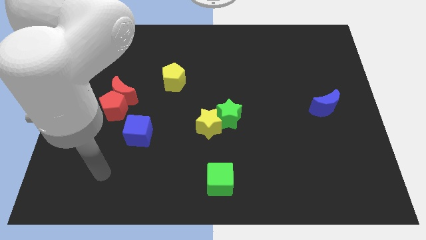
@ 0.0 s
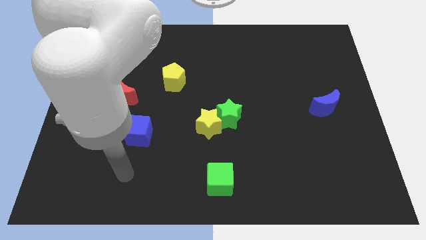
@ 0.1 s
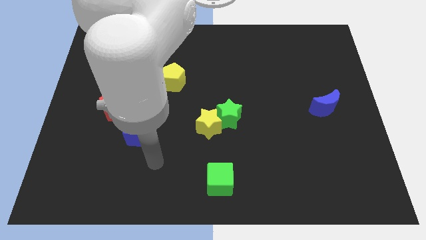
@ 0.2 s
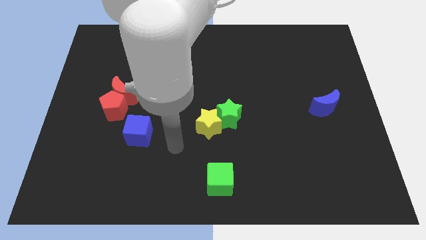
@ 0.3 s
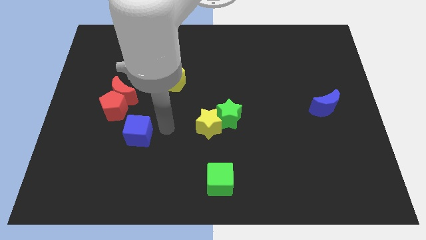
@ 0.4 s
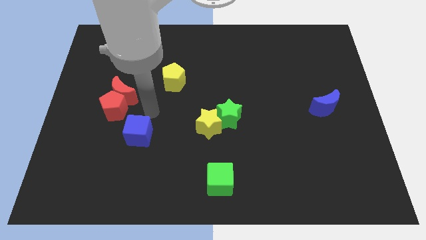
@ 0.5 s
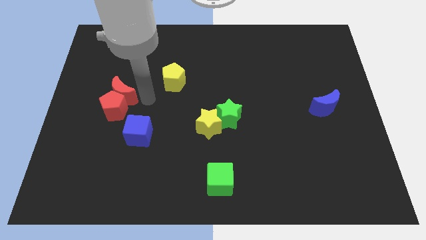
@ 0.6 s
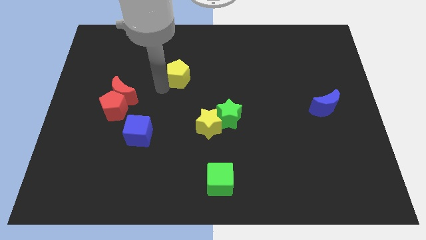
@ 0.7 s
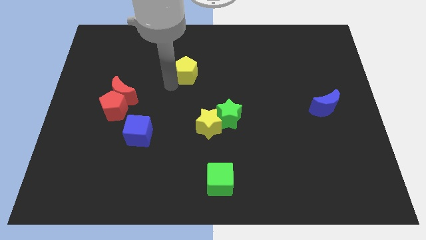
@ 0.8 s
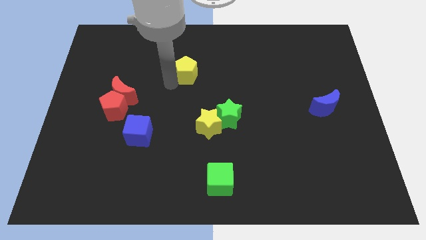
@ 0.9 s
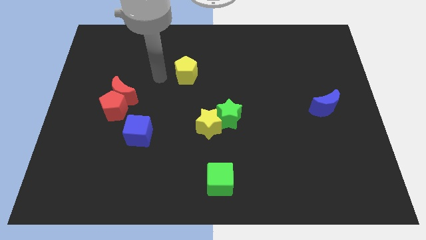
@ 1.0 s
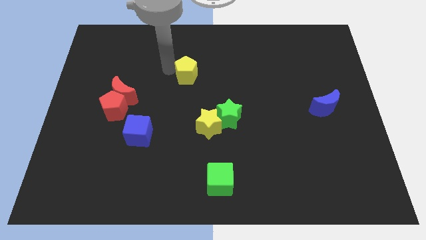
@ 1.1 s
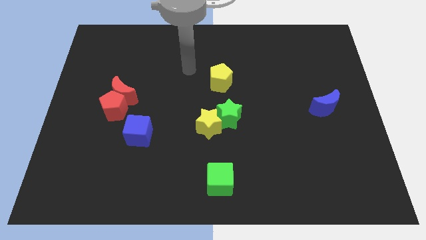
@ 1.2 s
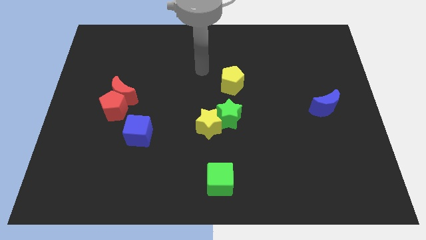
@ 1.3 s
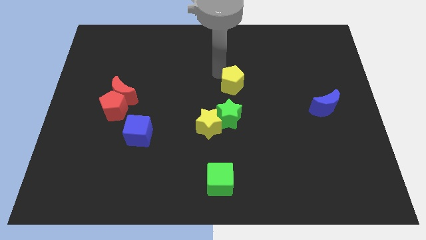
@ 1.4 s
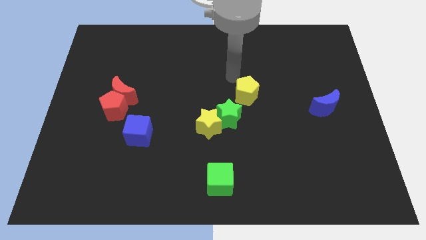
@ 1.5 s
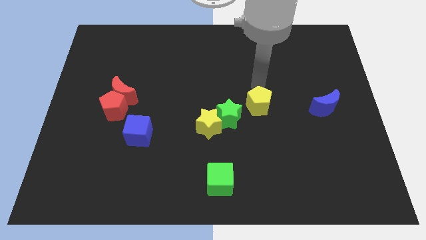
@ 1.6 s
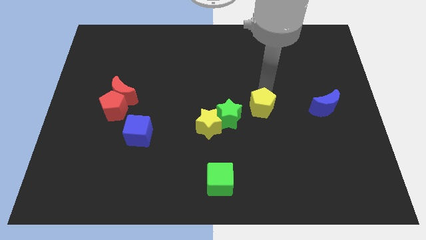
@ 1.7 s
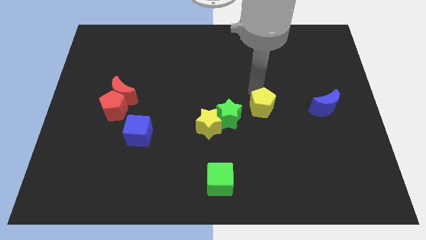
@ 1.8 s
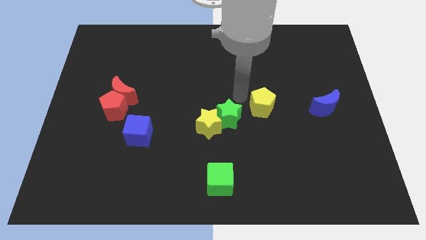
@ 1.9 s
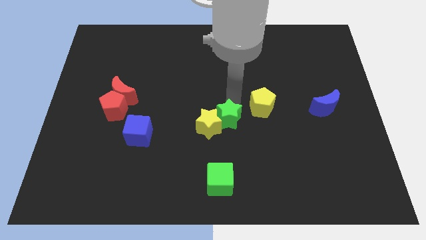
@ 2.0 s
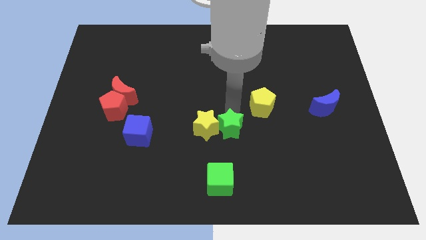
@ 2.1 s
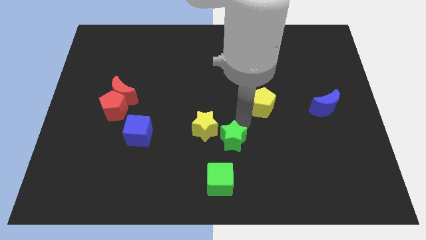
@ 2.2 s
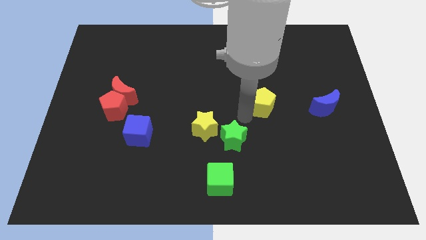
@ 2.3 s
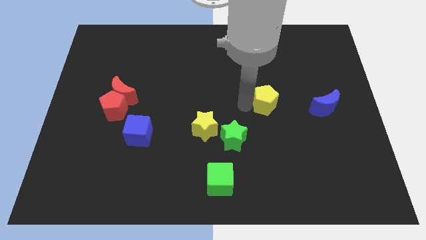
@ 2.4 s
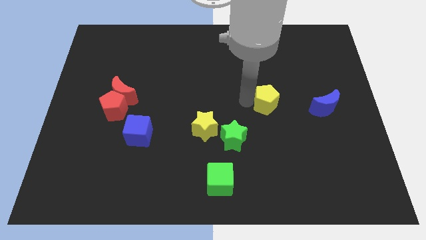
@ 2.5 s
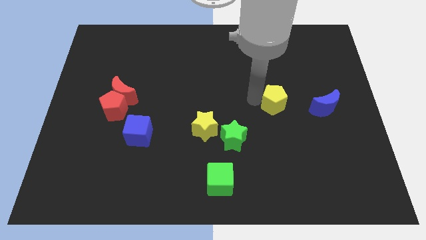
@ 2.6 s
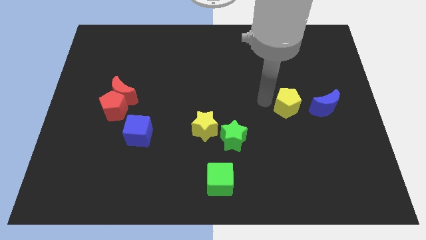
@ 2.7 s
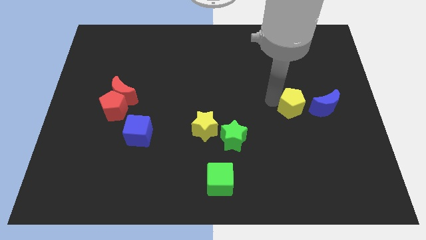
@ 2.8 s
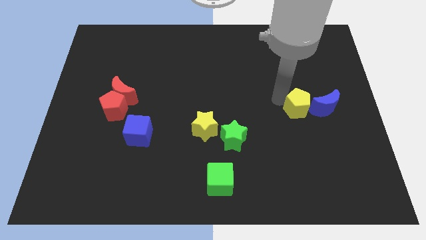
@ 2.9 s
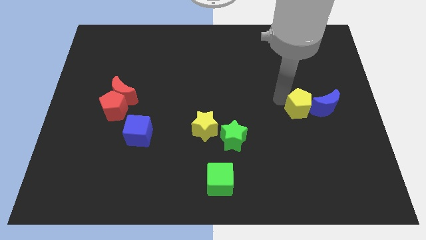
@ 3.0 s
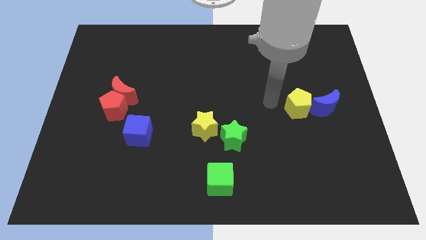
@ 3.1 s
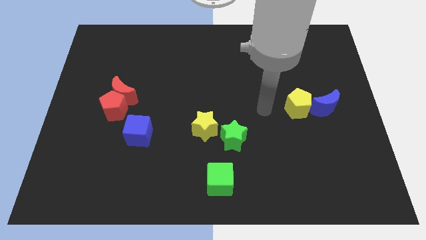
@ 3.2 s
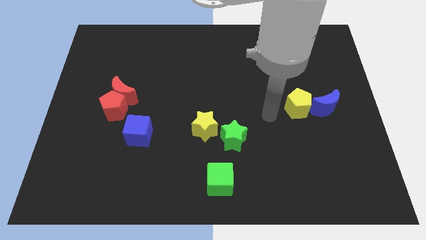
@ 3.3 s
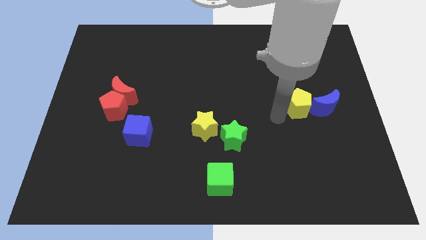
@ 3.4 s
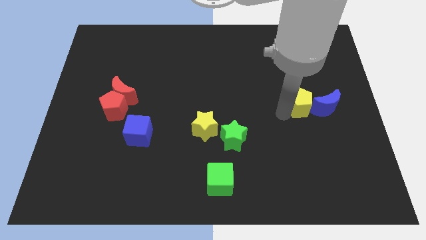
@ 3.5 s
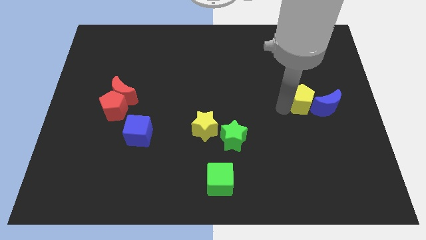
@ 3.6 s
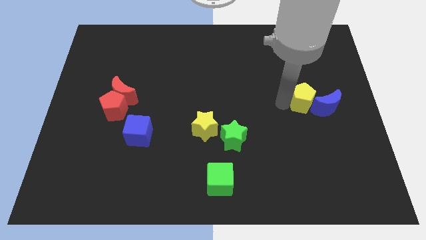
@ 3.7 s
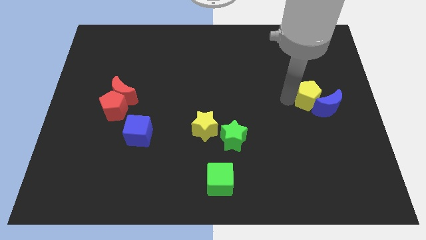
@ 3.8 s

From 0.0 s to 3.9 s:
put the yellow pentagon next to the blue moon

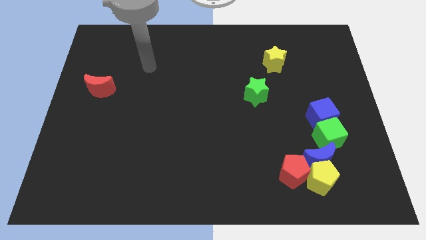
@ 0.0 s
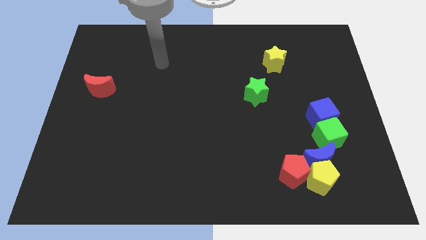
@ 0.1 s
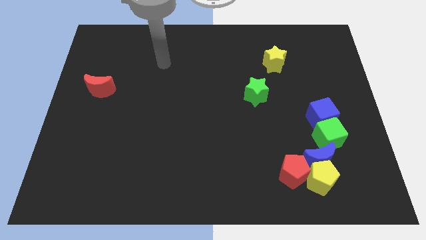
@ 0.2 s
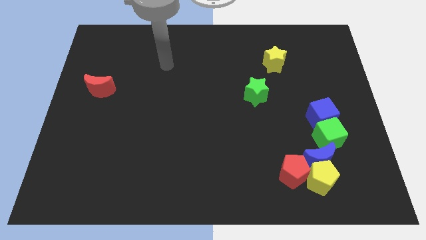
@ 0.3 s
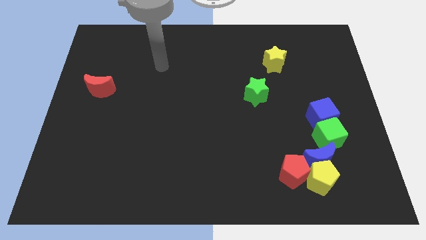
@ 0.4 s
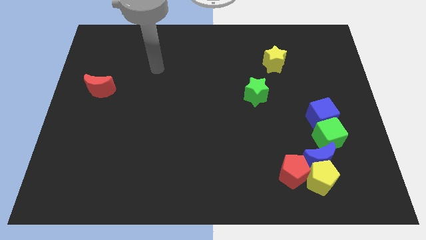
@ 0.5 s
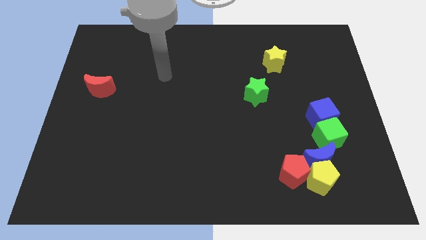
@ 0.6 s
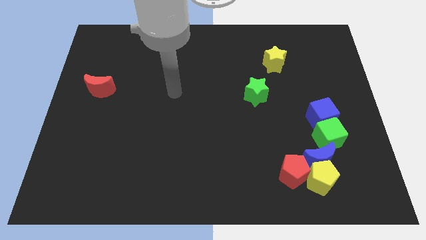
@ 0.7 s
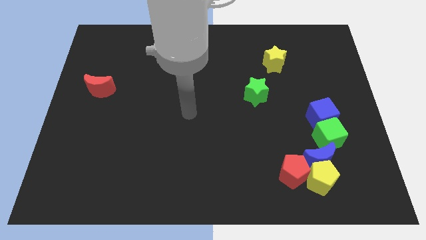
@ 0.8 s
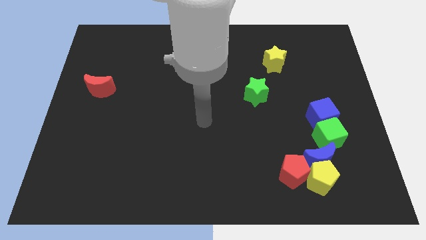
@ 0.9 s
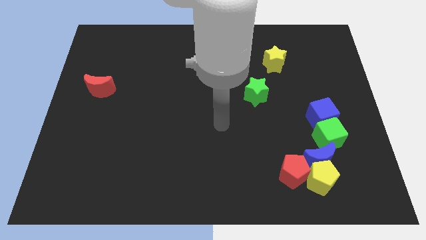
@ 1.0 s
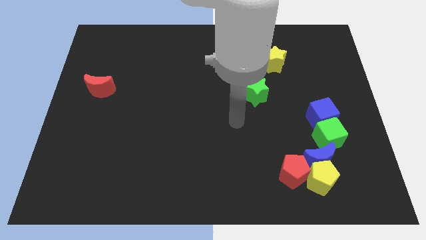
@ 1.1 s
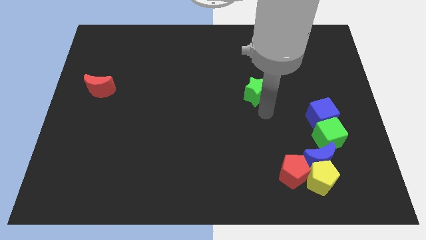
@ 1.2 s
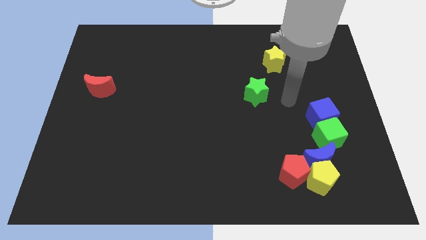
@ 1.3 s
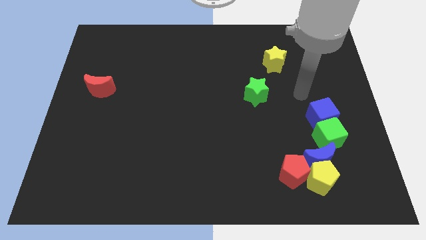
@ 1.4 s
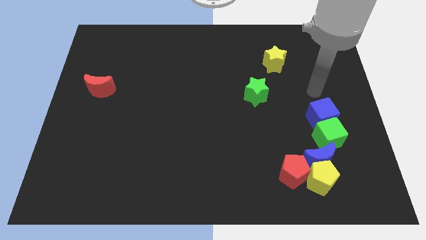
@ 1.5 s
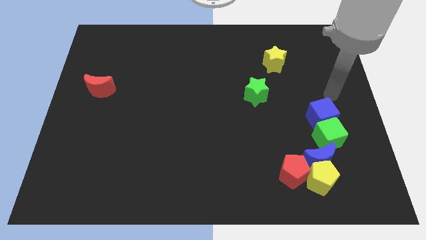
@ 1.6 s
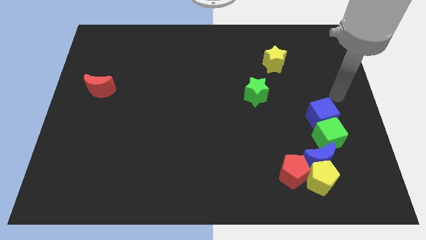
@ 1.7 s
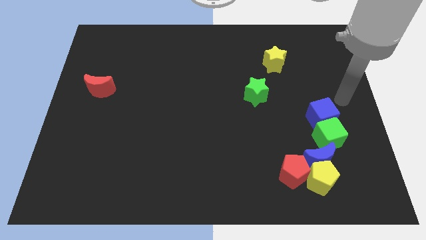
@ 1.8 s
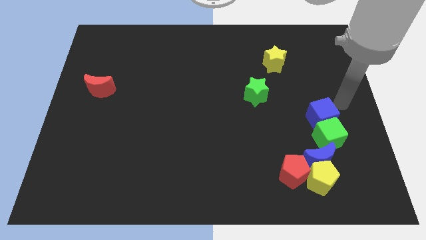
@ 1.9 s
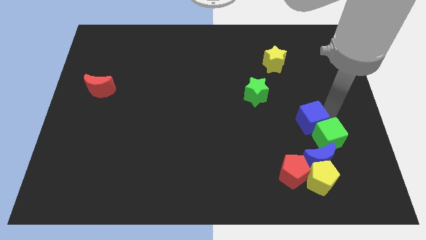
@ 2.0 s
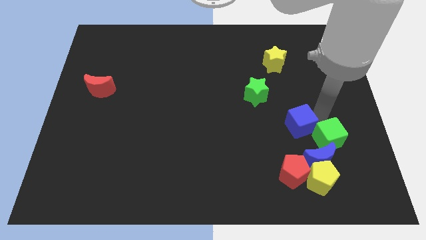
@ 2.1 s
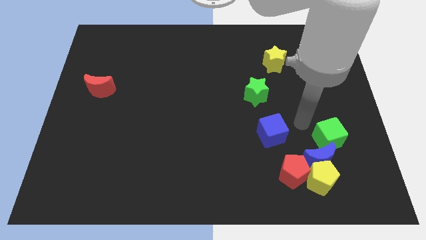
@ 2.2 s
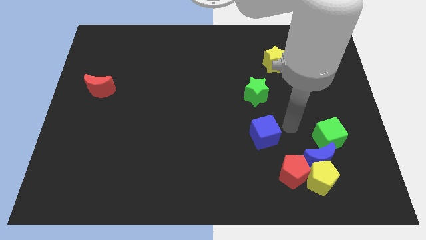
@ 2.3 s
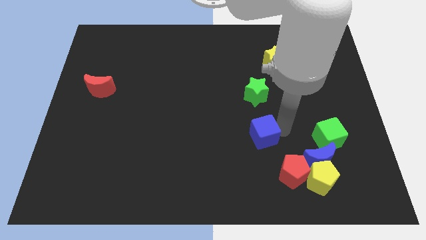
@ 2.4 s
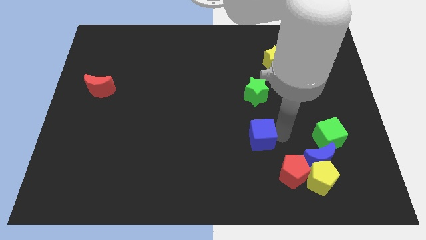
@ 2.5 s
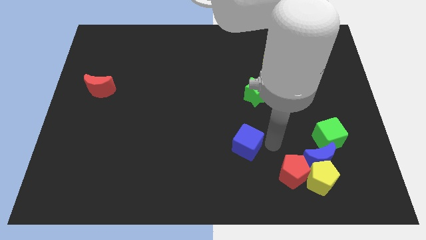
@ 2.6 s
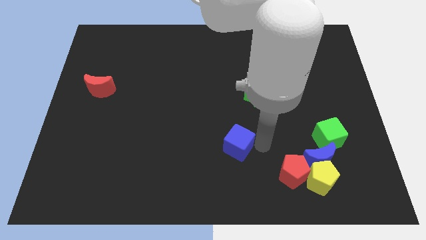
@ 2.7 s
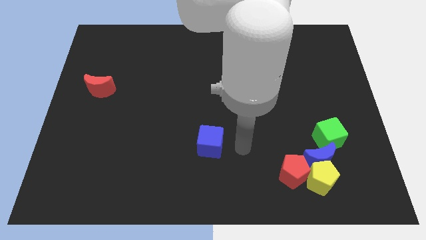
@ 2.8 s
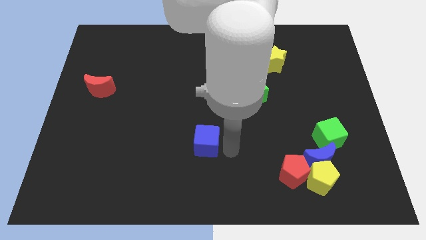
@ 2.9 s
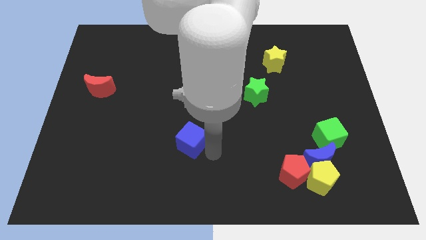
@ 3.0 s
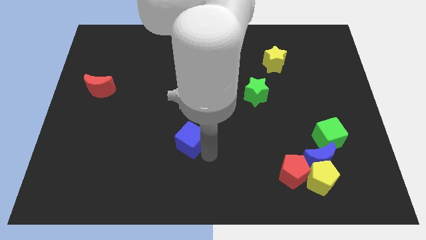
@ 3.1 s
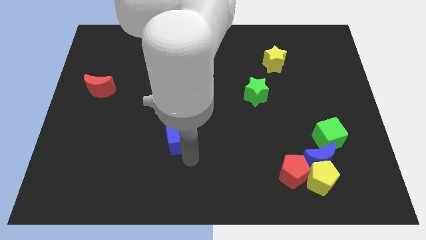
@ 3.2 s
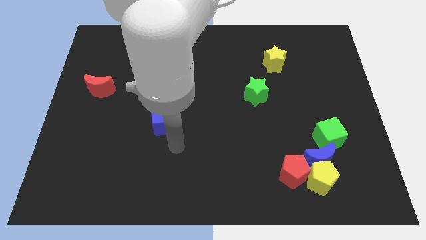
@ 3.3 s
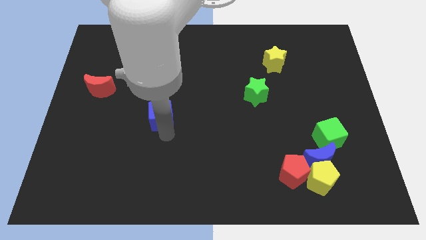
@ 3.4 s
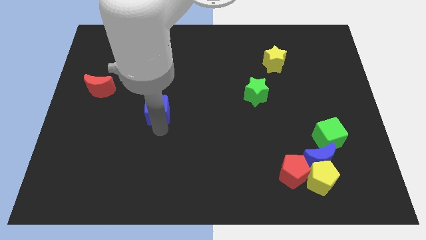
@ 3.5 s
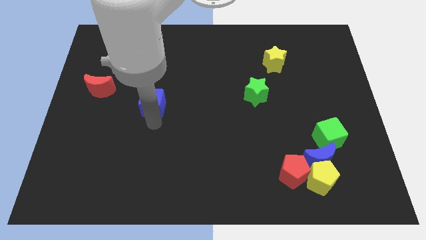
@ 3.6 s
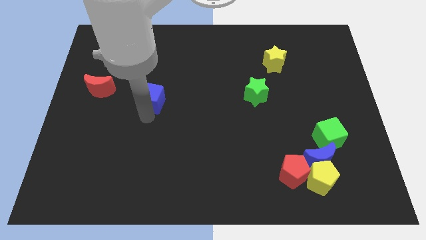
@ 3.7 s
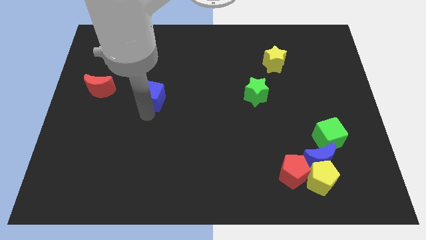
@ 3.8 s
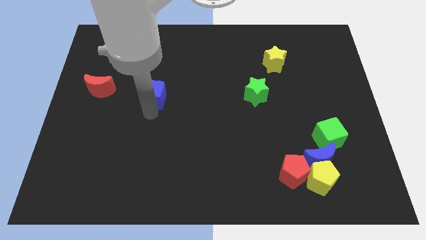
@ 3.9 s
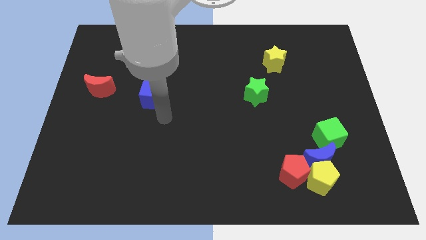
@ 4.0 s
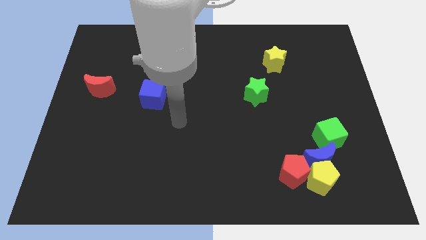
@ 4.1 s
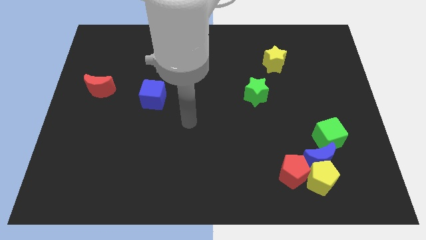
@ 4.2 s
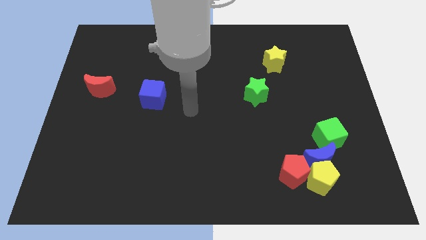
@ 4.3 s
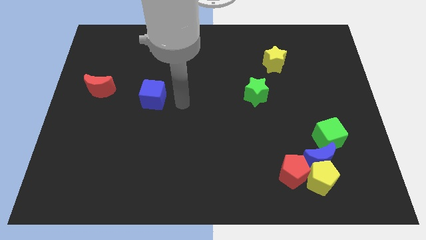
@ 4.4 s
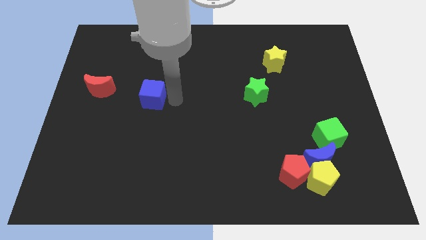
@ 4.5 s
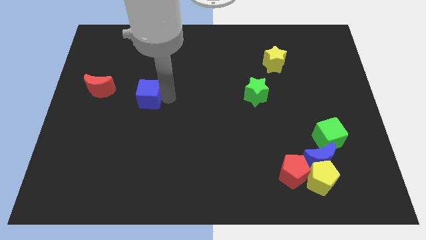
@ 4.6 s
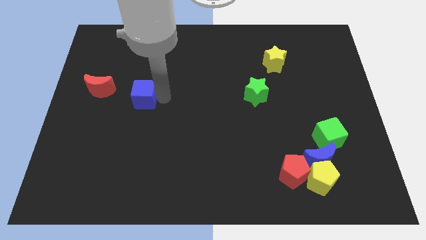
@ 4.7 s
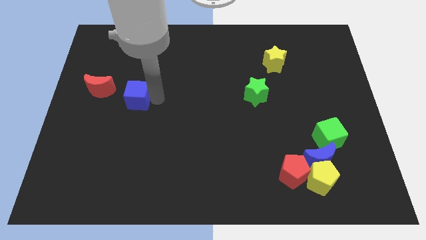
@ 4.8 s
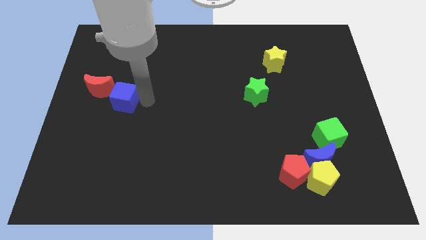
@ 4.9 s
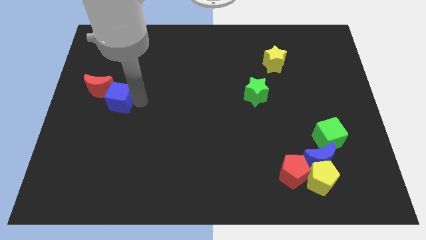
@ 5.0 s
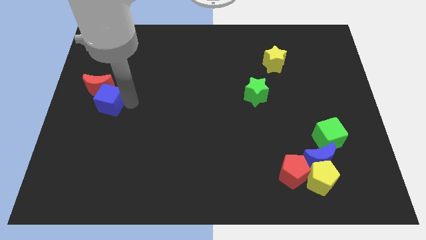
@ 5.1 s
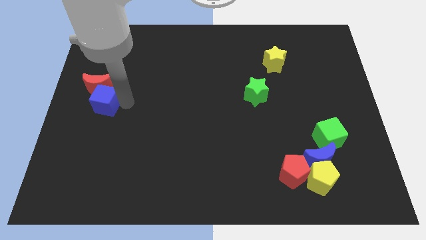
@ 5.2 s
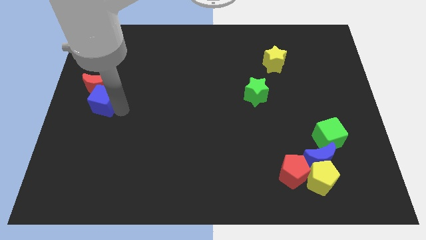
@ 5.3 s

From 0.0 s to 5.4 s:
slide the blue cube to the red moon
